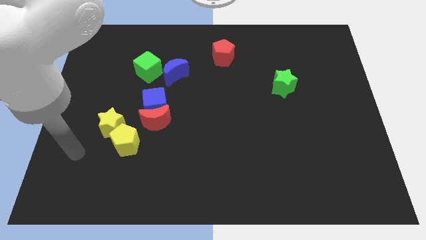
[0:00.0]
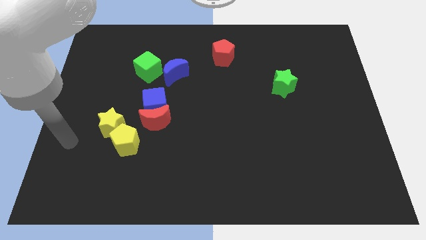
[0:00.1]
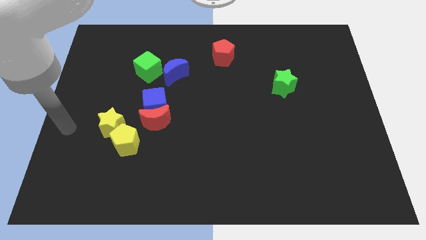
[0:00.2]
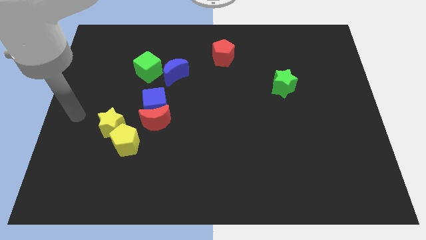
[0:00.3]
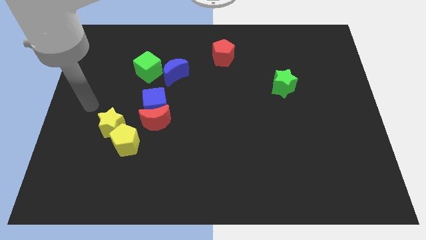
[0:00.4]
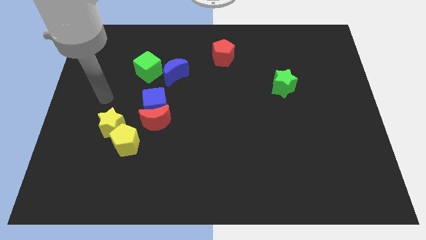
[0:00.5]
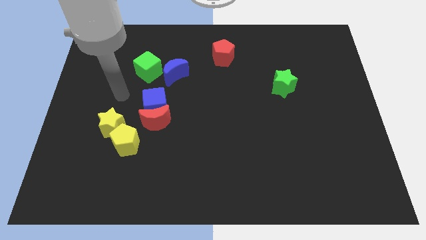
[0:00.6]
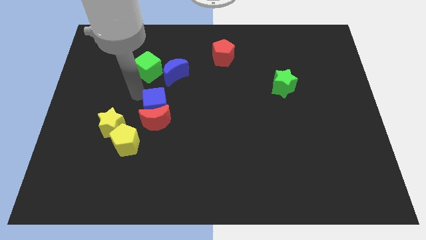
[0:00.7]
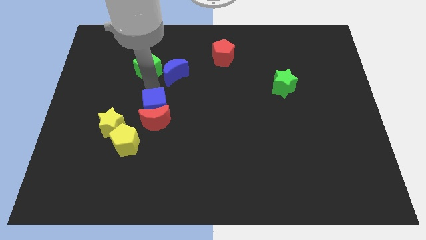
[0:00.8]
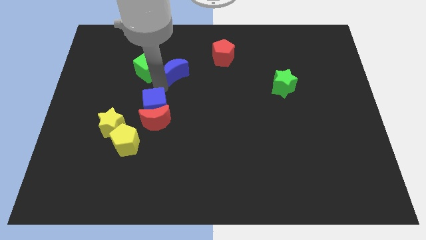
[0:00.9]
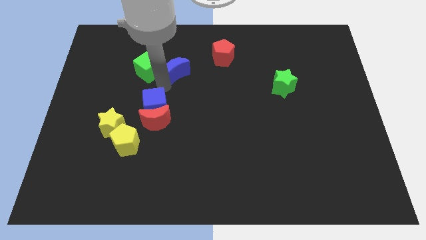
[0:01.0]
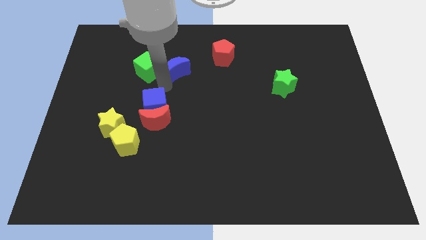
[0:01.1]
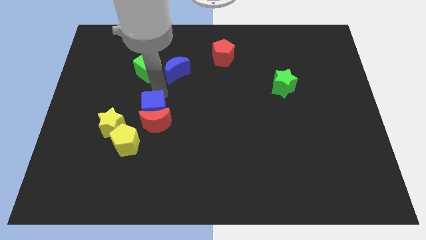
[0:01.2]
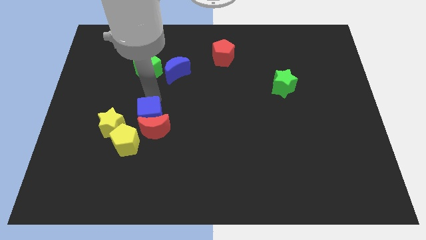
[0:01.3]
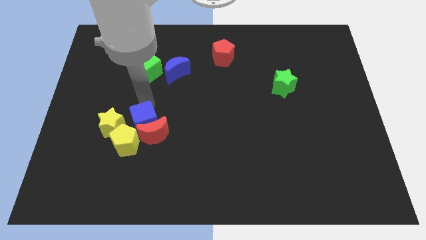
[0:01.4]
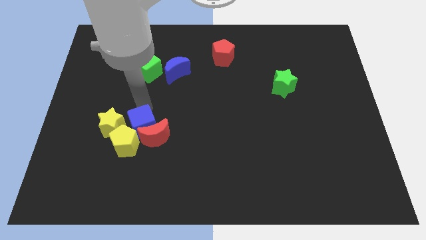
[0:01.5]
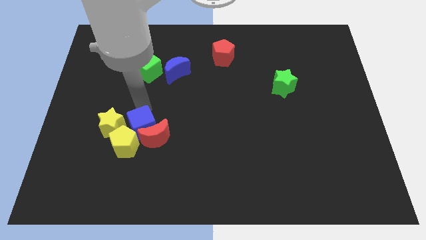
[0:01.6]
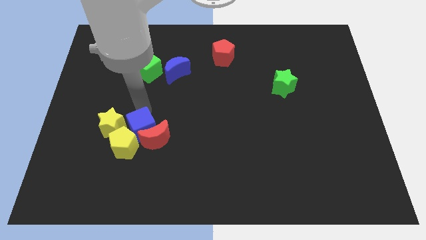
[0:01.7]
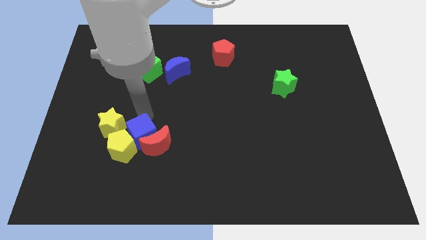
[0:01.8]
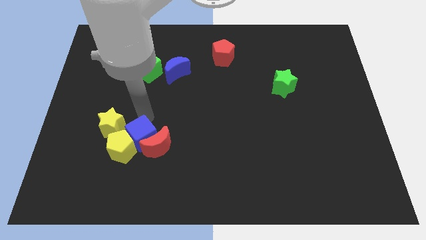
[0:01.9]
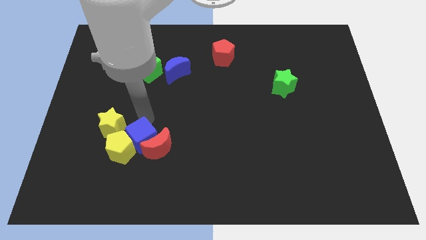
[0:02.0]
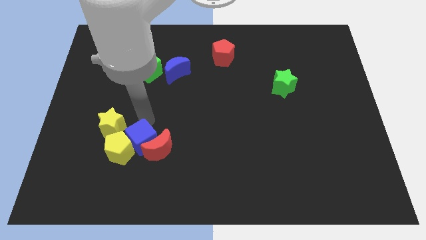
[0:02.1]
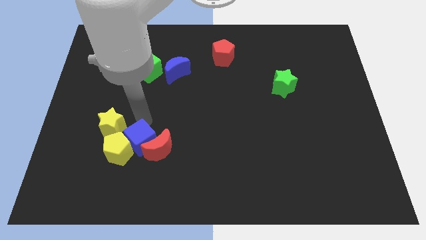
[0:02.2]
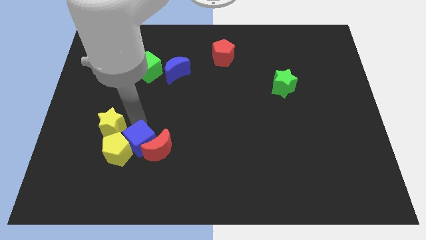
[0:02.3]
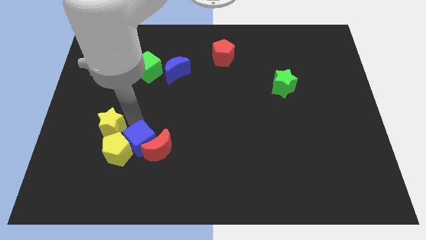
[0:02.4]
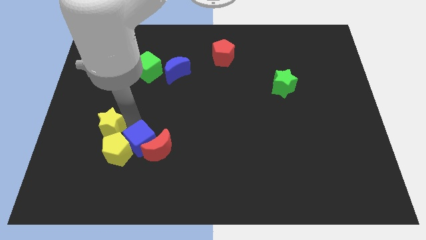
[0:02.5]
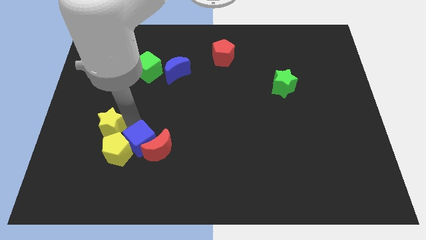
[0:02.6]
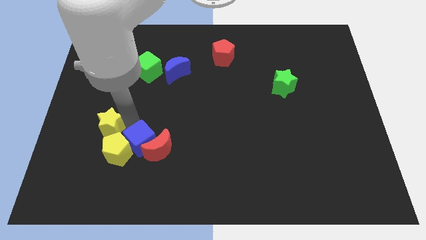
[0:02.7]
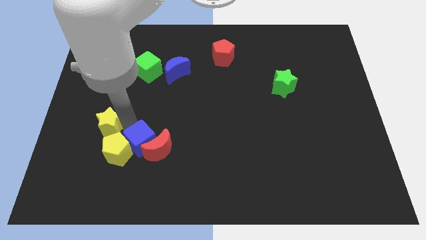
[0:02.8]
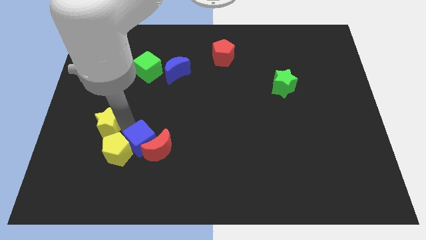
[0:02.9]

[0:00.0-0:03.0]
move the blue cube into the yellow pentagon

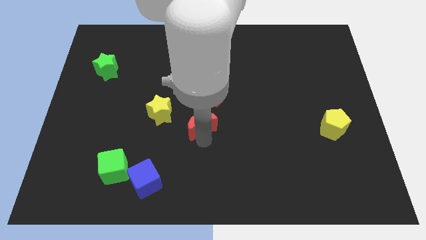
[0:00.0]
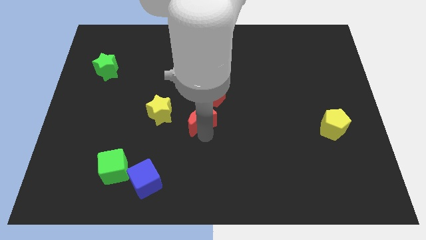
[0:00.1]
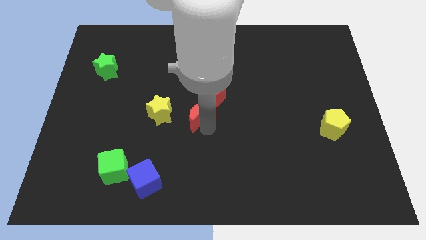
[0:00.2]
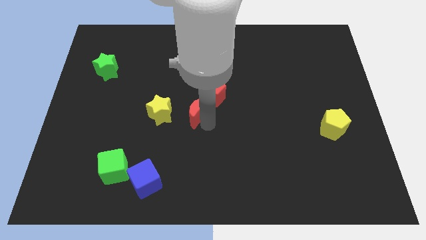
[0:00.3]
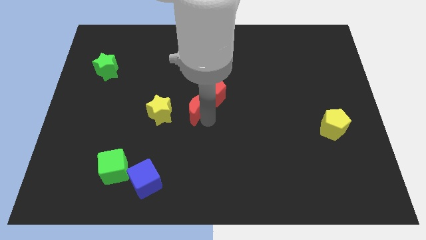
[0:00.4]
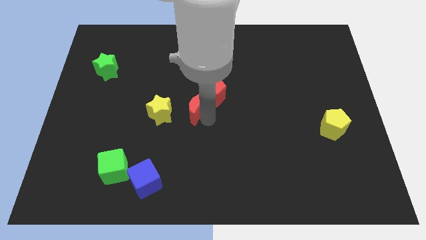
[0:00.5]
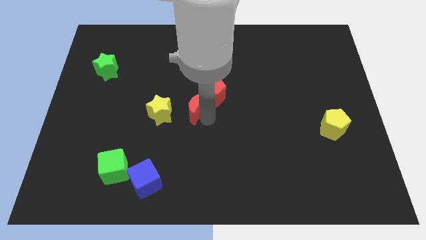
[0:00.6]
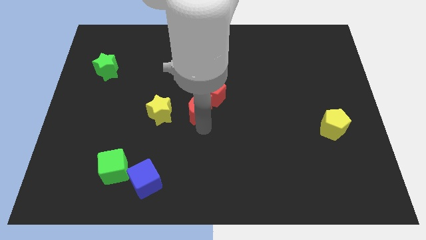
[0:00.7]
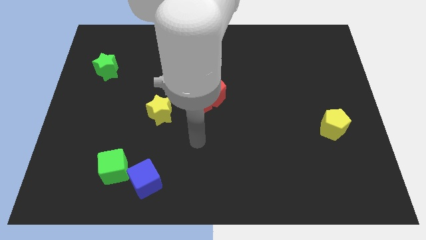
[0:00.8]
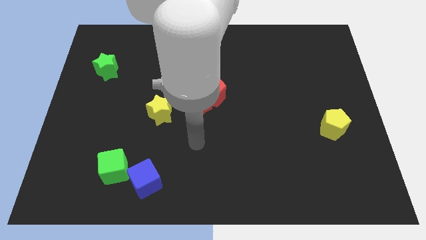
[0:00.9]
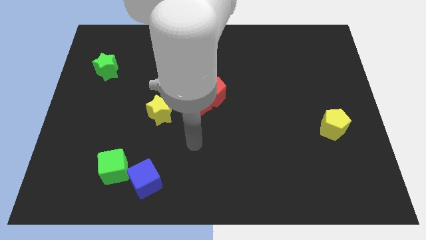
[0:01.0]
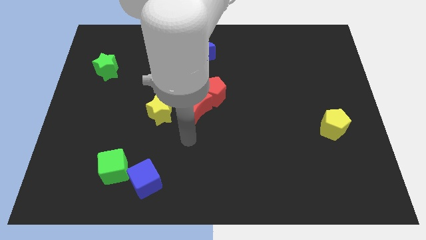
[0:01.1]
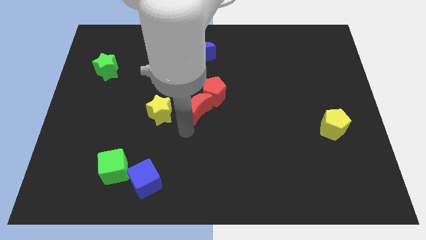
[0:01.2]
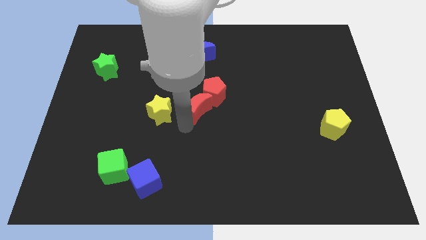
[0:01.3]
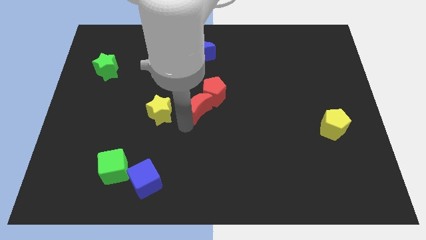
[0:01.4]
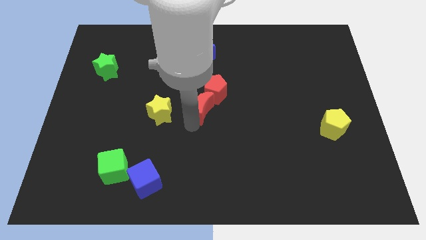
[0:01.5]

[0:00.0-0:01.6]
push the red moon into the bottom side of the red pentagon

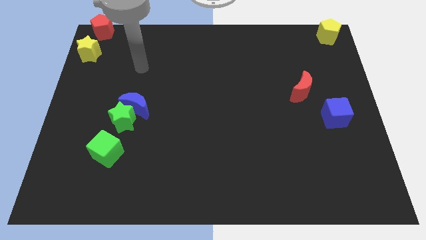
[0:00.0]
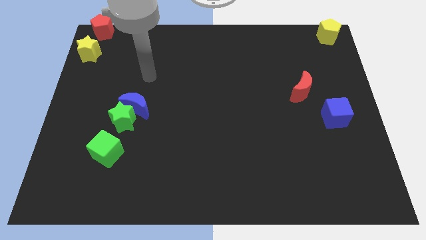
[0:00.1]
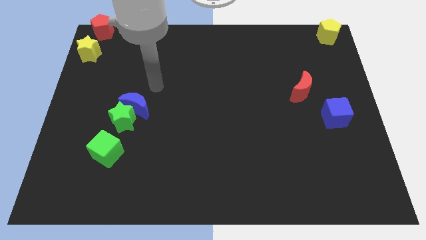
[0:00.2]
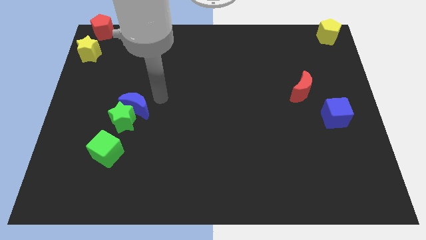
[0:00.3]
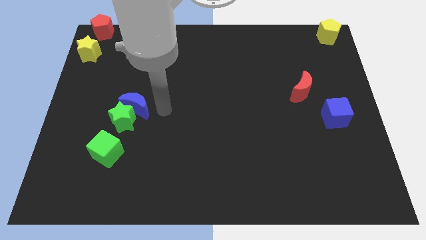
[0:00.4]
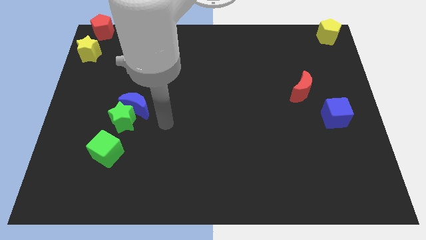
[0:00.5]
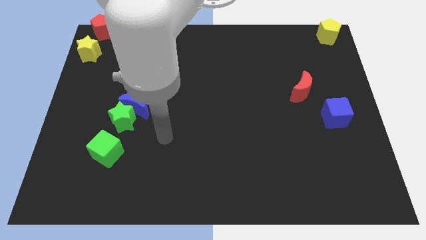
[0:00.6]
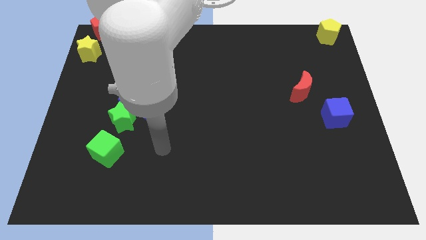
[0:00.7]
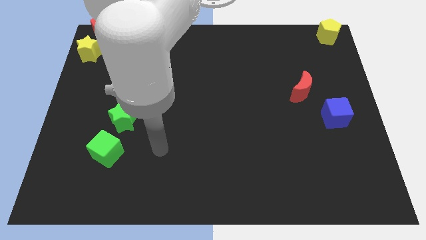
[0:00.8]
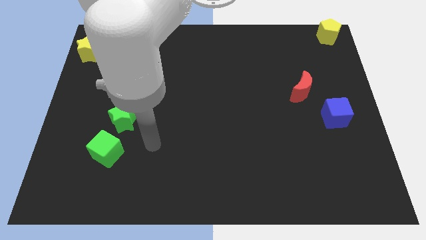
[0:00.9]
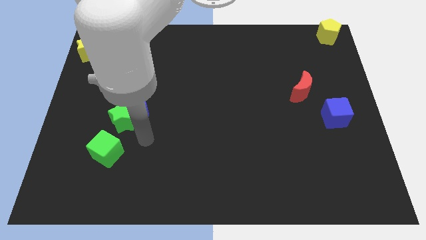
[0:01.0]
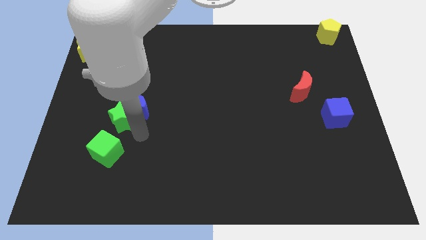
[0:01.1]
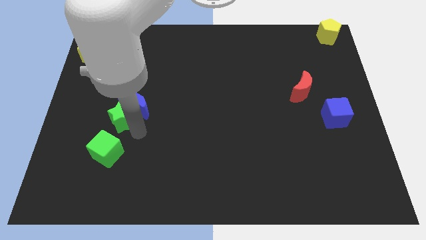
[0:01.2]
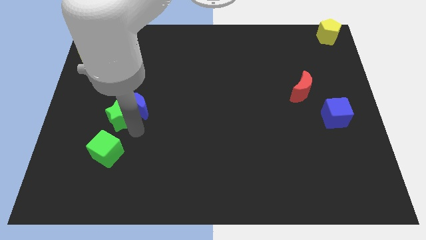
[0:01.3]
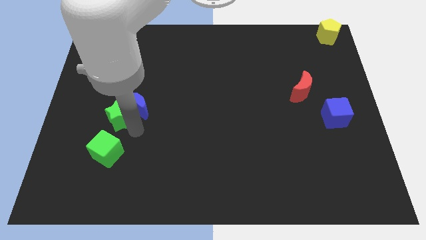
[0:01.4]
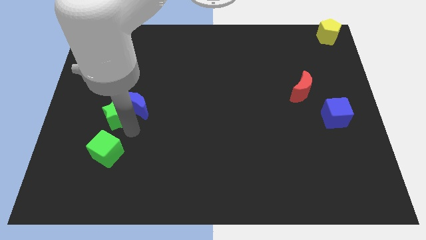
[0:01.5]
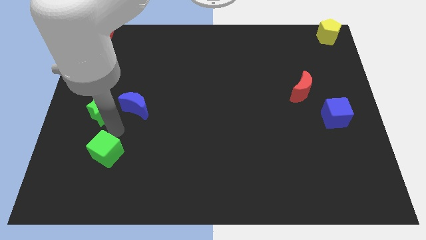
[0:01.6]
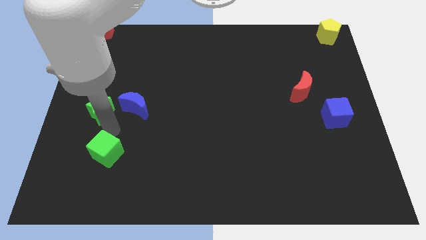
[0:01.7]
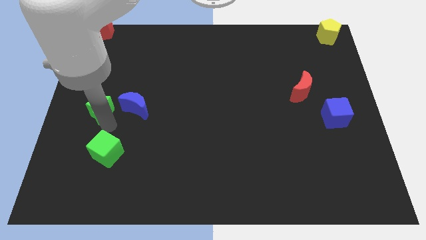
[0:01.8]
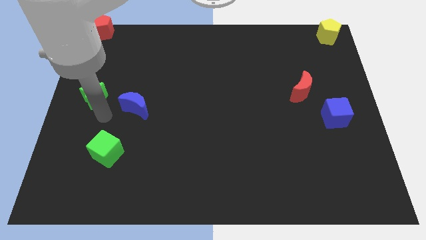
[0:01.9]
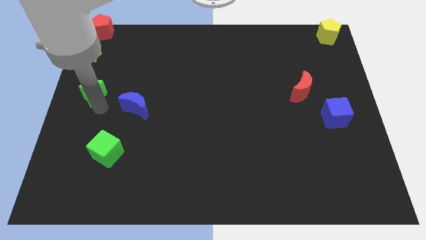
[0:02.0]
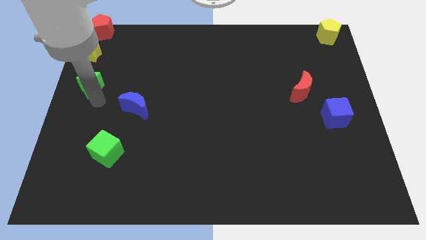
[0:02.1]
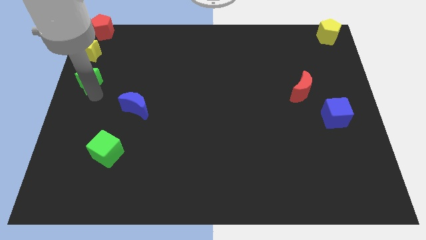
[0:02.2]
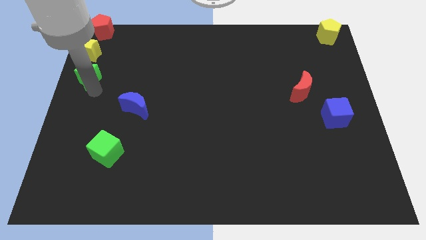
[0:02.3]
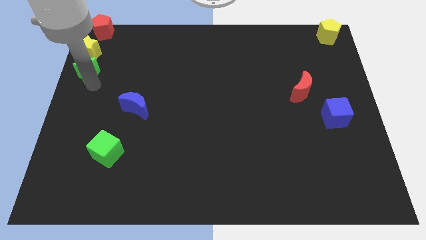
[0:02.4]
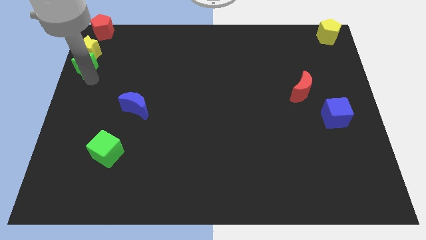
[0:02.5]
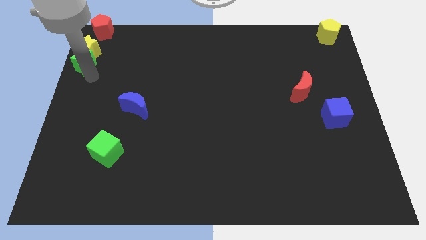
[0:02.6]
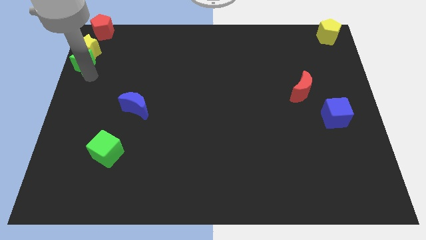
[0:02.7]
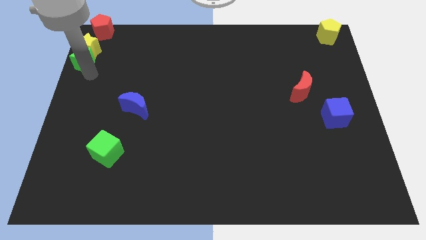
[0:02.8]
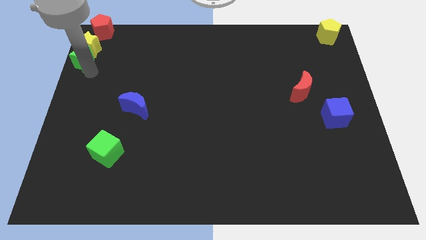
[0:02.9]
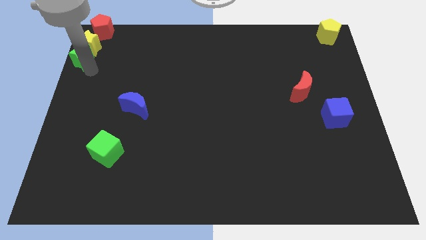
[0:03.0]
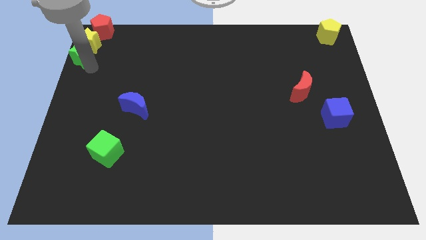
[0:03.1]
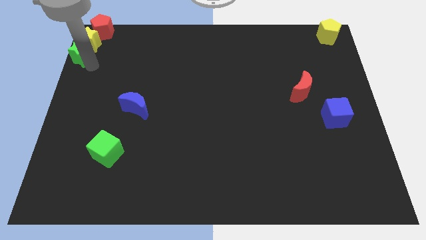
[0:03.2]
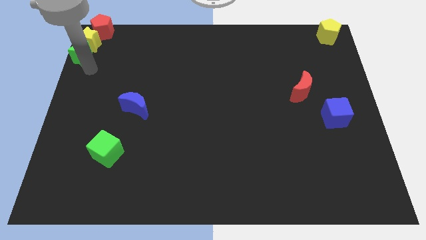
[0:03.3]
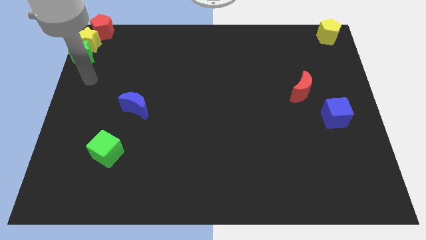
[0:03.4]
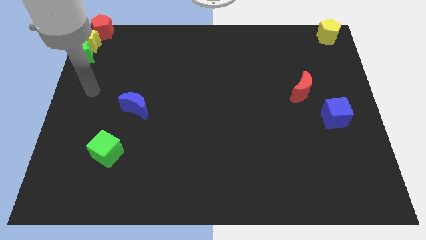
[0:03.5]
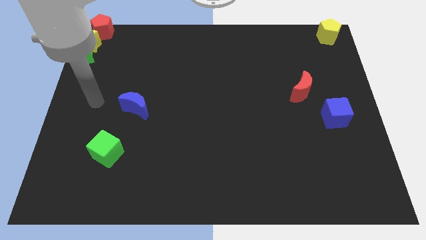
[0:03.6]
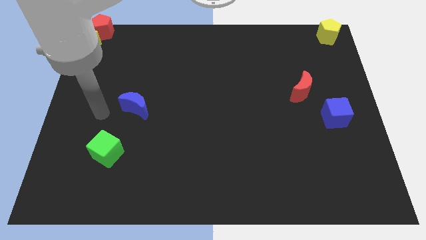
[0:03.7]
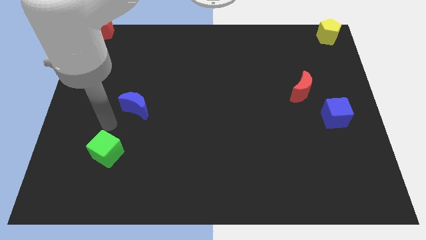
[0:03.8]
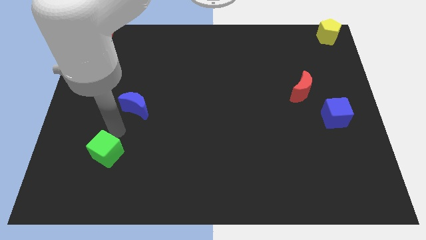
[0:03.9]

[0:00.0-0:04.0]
push the green star into the yellow star

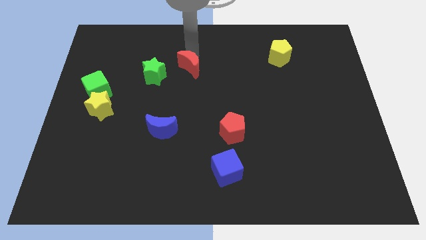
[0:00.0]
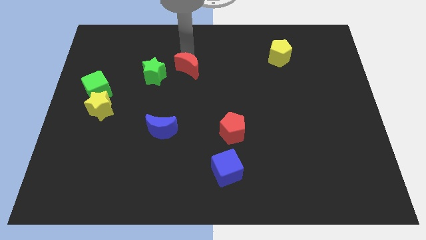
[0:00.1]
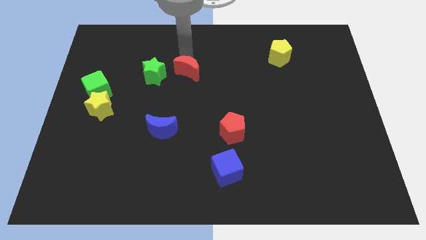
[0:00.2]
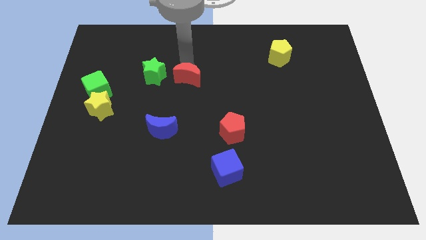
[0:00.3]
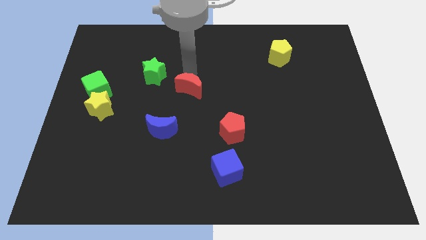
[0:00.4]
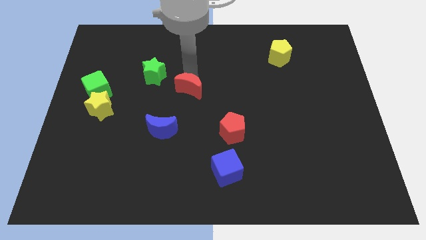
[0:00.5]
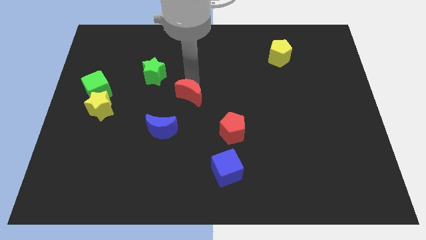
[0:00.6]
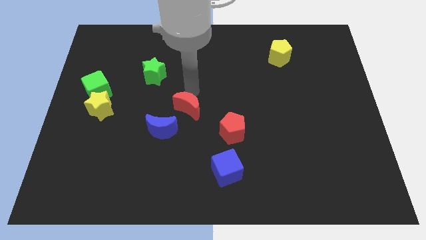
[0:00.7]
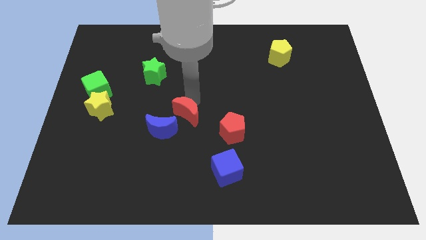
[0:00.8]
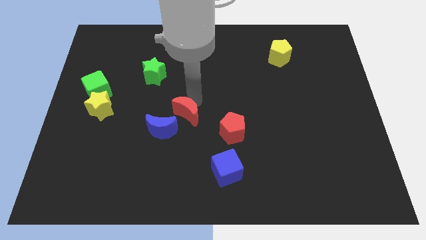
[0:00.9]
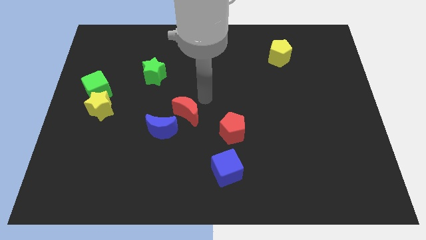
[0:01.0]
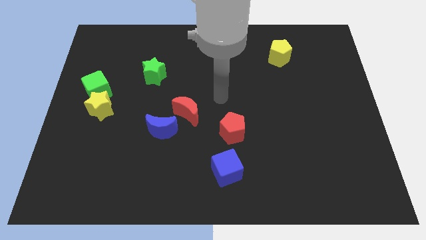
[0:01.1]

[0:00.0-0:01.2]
move the red moon diagonally bottom right to the green star
